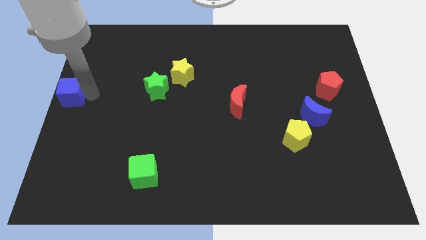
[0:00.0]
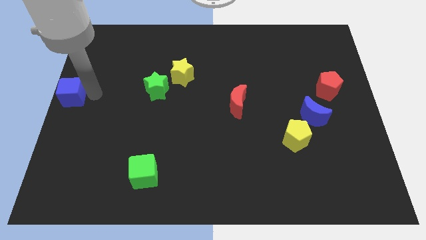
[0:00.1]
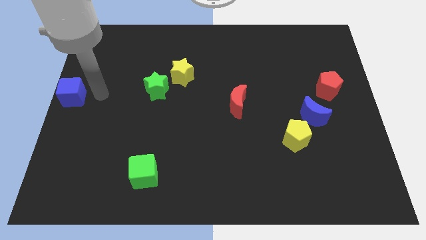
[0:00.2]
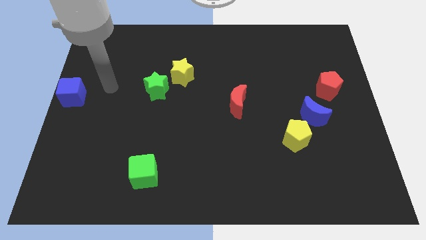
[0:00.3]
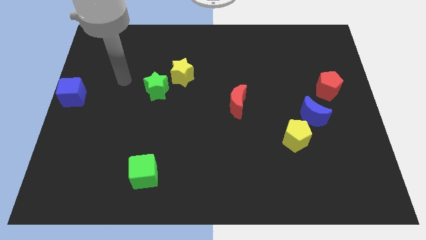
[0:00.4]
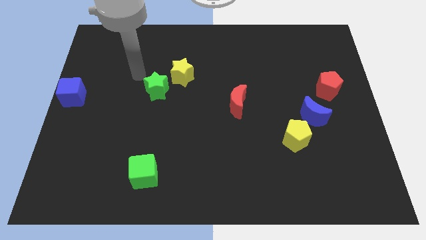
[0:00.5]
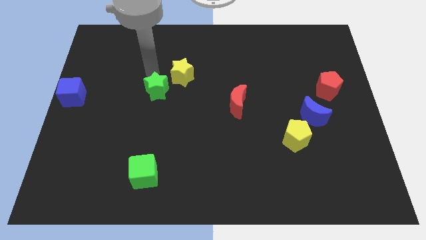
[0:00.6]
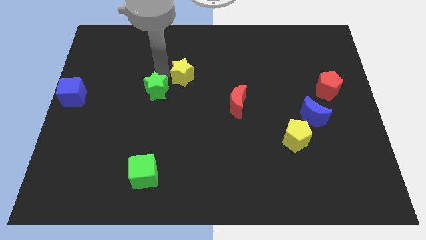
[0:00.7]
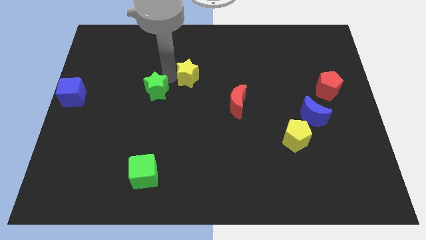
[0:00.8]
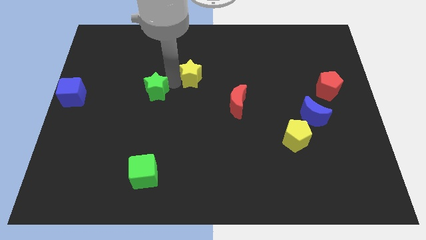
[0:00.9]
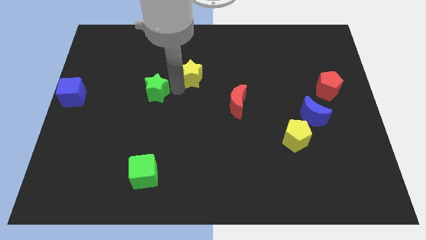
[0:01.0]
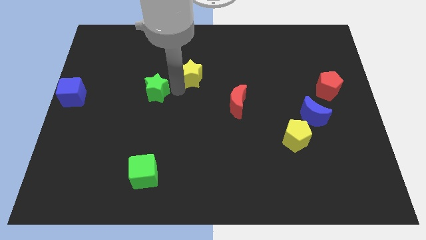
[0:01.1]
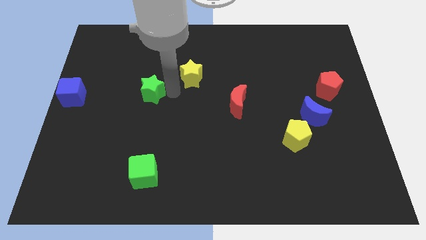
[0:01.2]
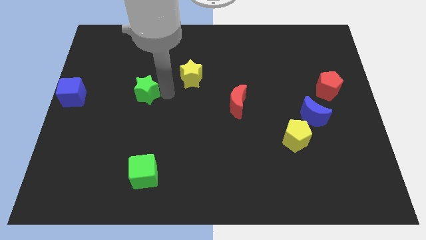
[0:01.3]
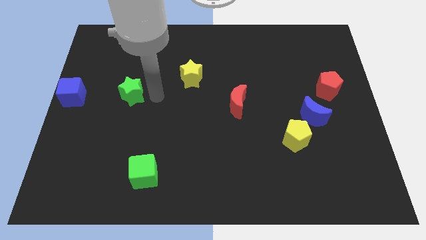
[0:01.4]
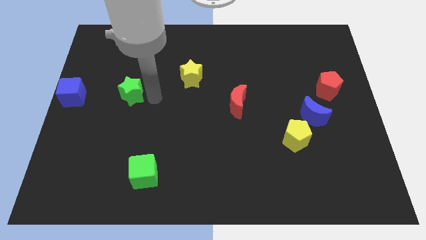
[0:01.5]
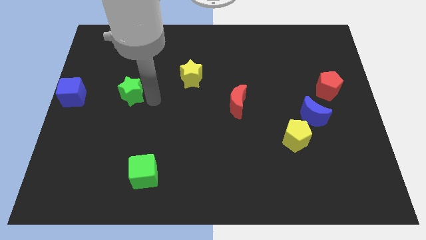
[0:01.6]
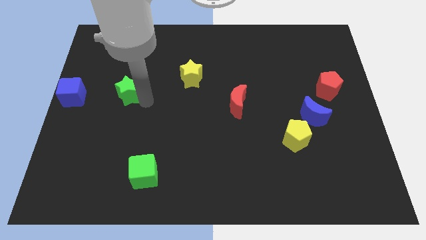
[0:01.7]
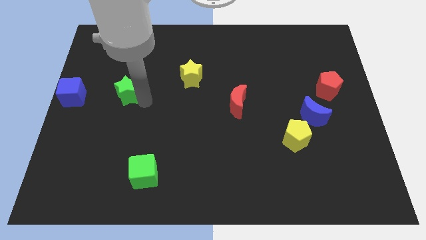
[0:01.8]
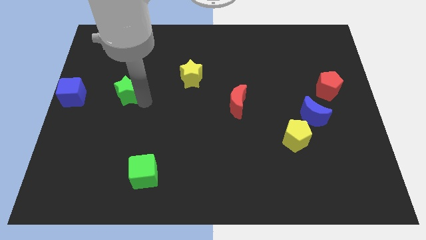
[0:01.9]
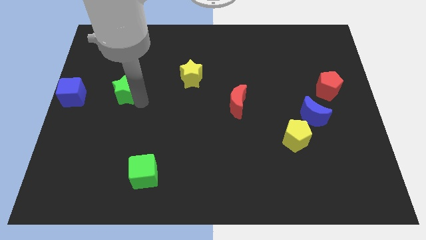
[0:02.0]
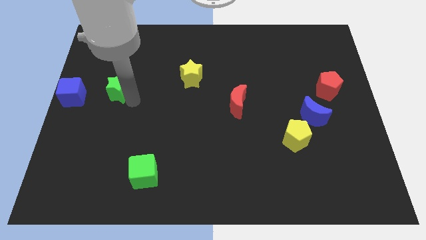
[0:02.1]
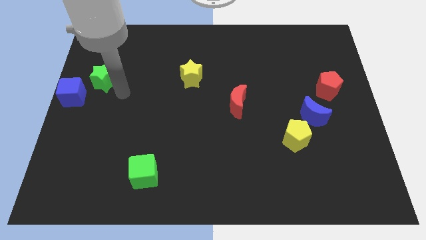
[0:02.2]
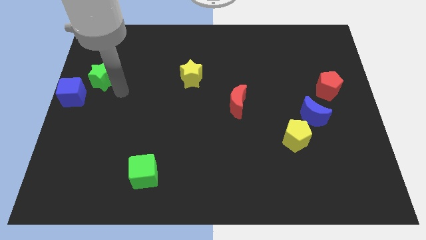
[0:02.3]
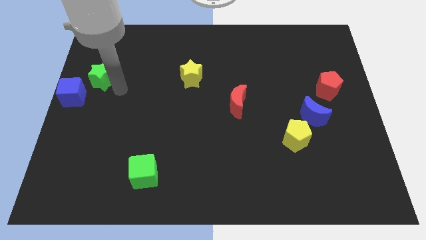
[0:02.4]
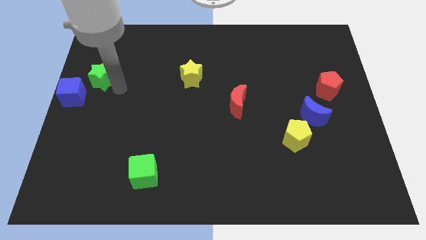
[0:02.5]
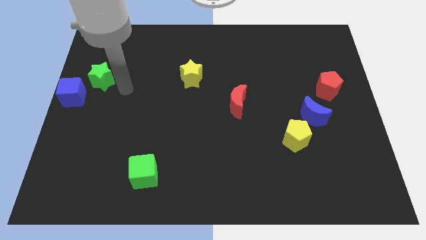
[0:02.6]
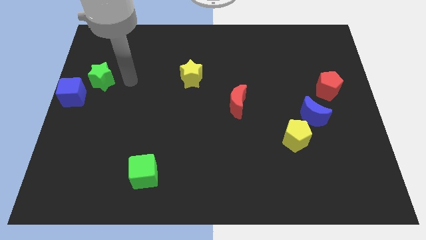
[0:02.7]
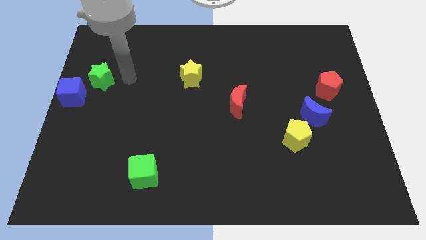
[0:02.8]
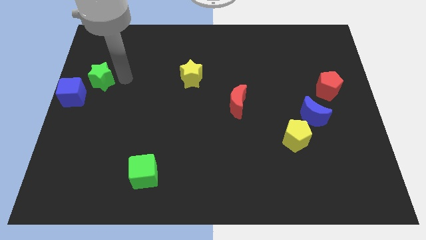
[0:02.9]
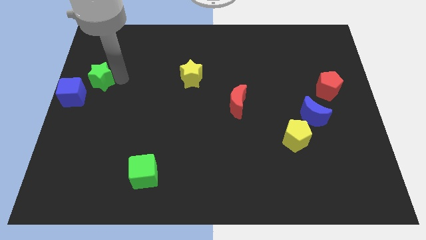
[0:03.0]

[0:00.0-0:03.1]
separate green star away from yellow star

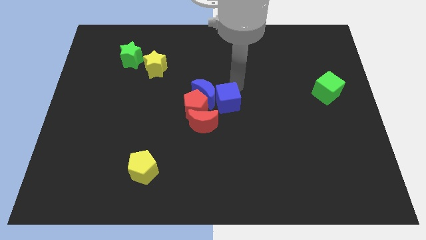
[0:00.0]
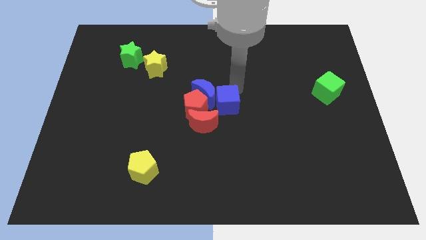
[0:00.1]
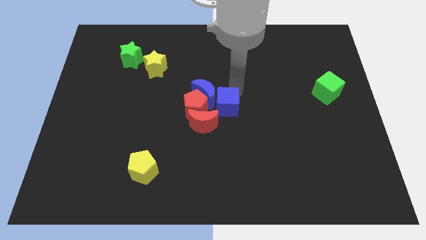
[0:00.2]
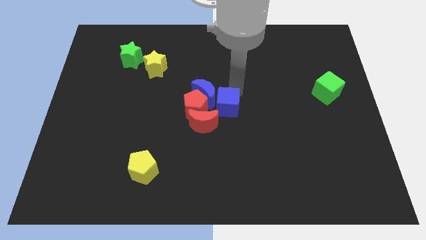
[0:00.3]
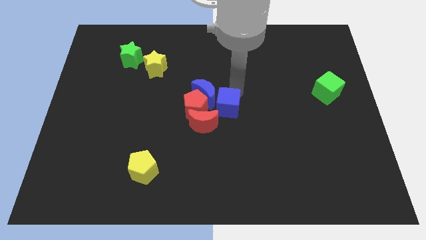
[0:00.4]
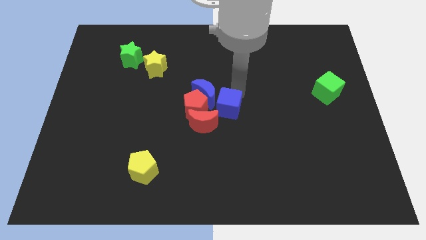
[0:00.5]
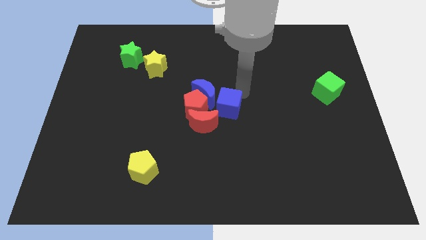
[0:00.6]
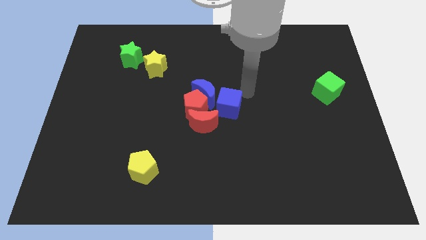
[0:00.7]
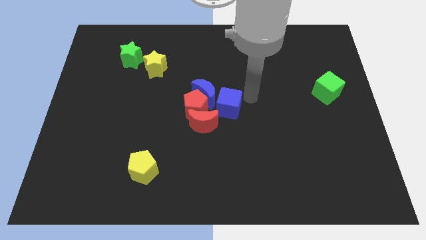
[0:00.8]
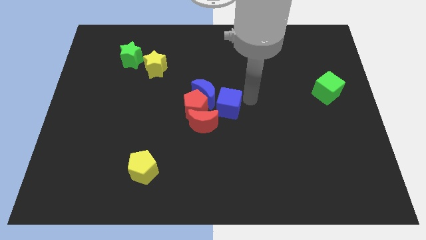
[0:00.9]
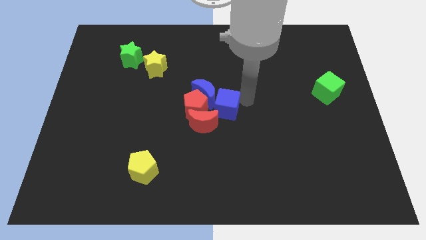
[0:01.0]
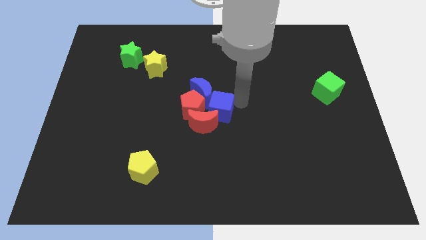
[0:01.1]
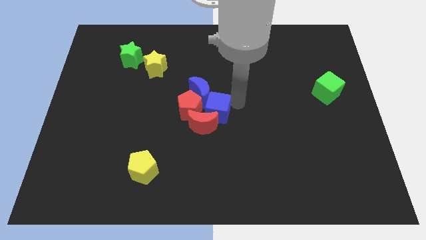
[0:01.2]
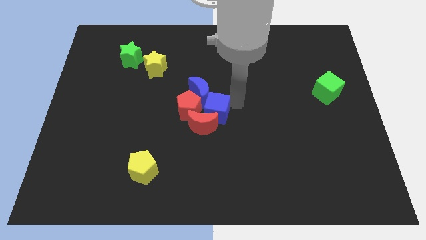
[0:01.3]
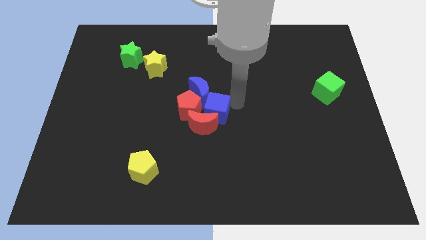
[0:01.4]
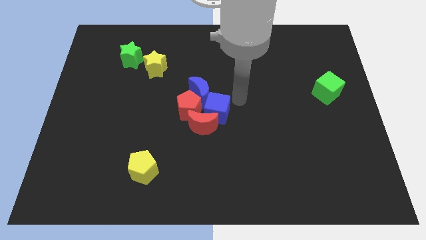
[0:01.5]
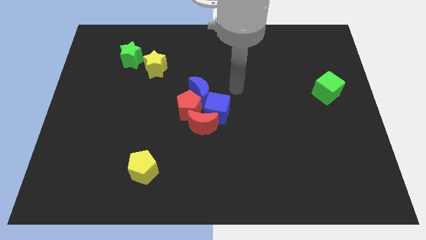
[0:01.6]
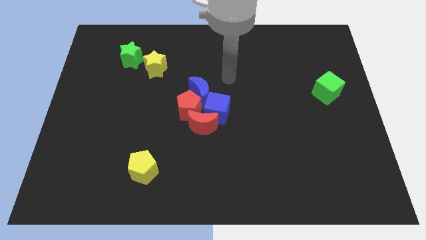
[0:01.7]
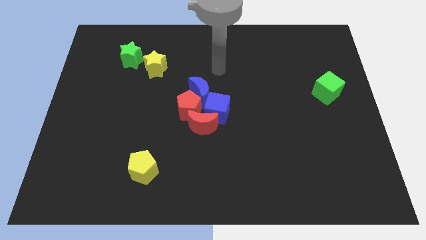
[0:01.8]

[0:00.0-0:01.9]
push the blue cube into the red moon

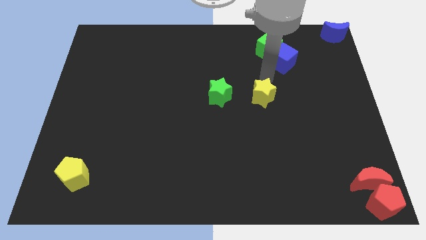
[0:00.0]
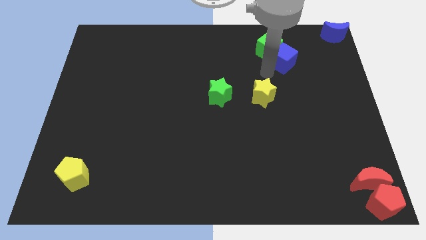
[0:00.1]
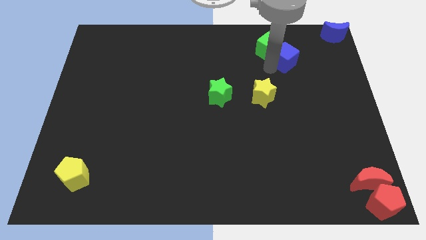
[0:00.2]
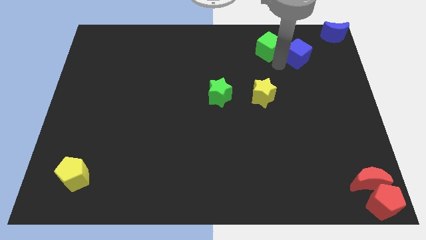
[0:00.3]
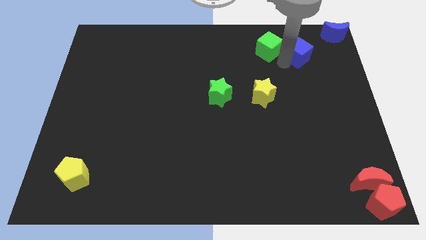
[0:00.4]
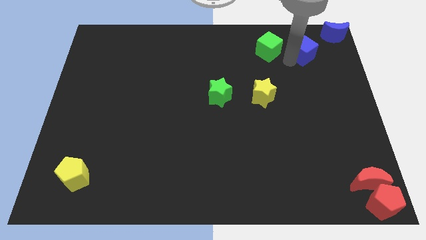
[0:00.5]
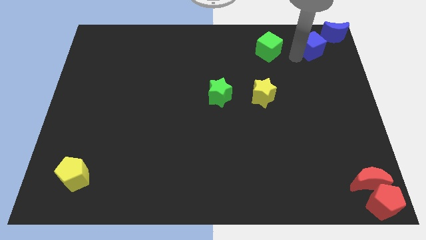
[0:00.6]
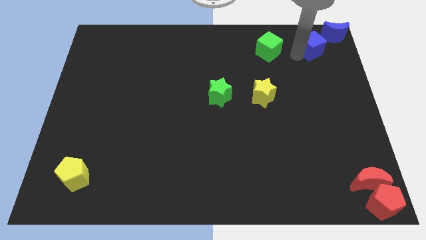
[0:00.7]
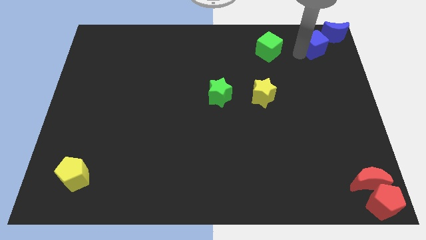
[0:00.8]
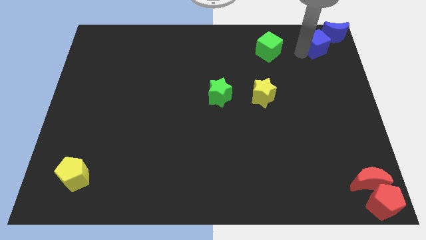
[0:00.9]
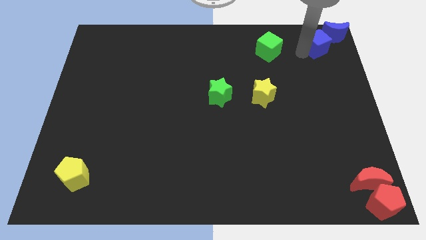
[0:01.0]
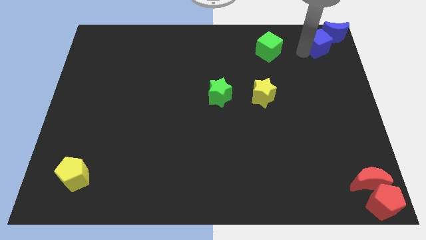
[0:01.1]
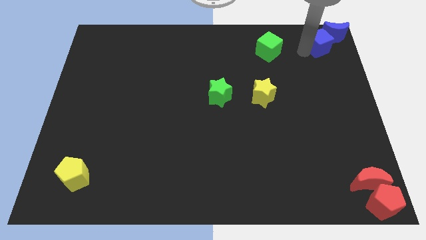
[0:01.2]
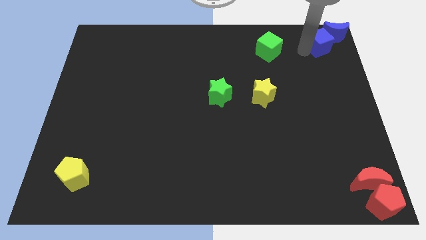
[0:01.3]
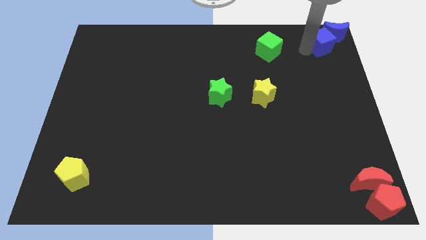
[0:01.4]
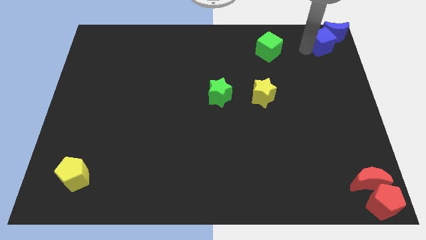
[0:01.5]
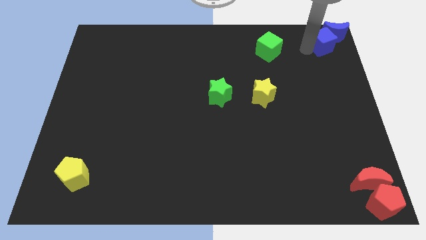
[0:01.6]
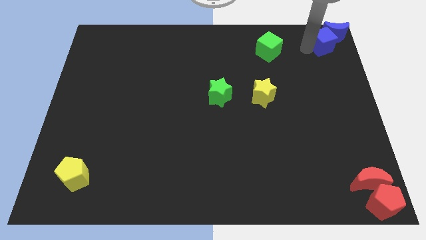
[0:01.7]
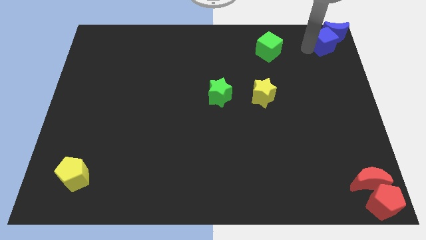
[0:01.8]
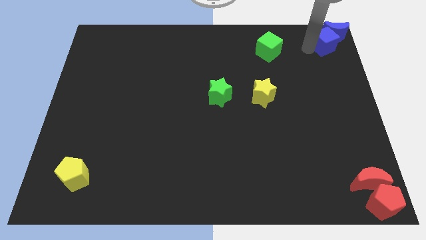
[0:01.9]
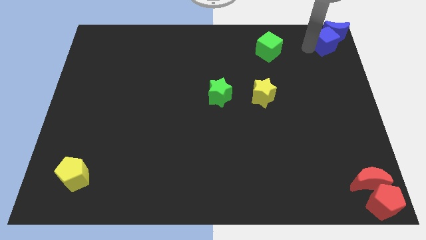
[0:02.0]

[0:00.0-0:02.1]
move the blue cube to the bottom of the blue crescent

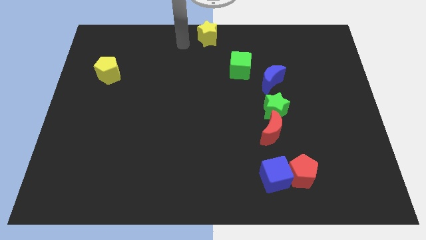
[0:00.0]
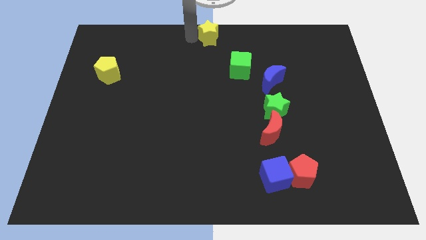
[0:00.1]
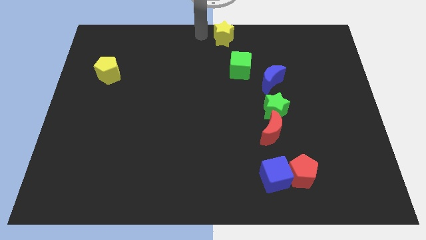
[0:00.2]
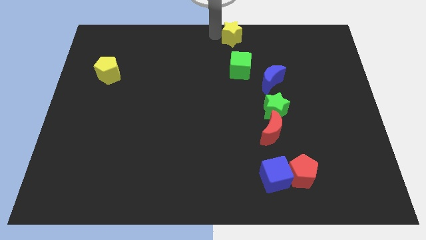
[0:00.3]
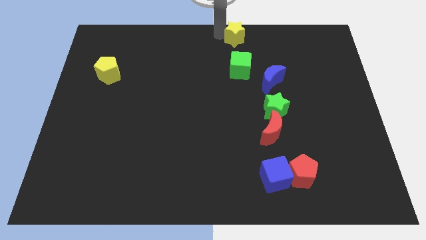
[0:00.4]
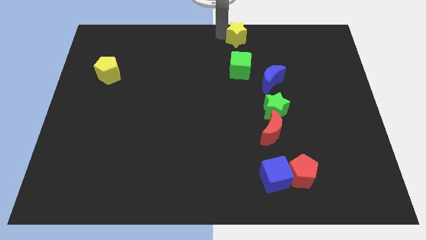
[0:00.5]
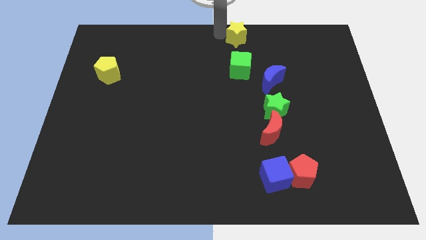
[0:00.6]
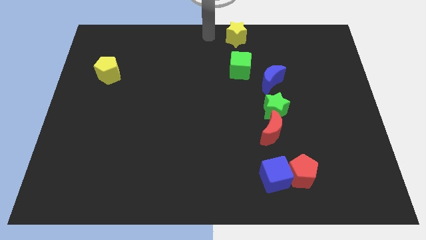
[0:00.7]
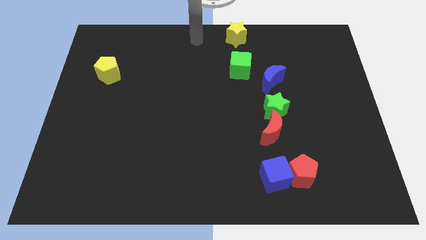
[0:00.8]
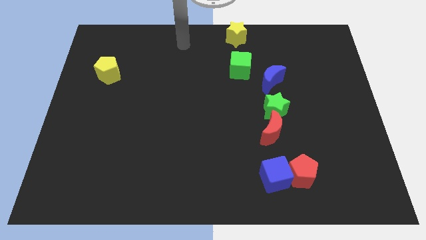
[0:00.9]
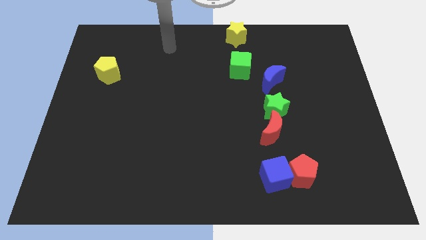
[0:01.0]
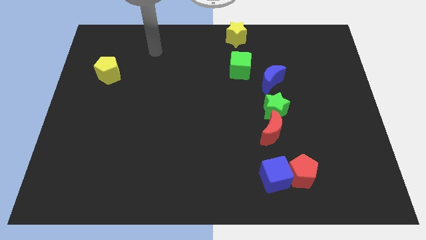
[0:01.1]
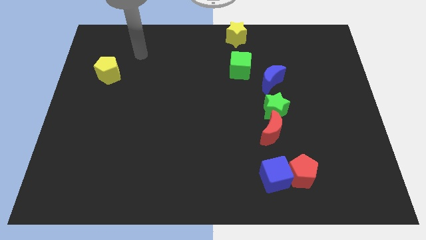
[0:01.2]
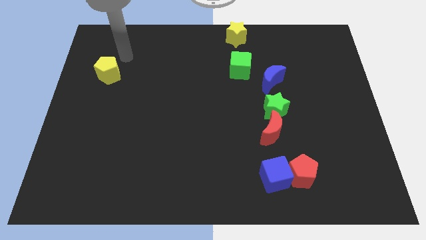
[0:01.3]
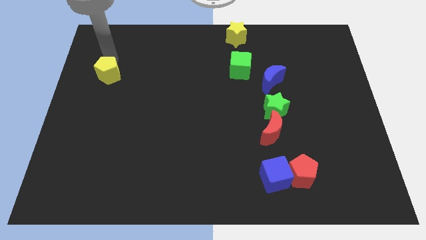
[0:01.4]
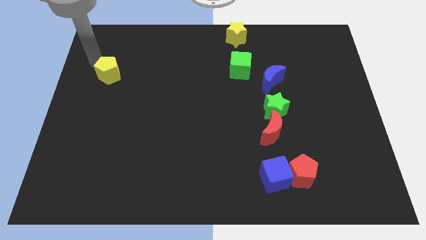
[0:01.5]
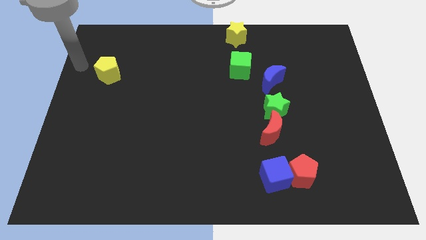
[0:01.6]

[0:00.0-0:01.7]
place the yellow star above the green cube
